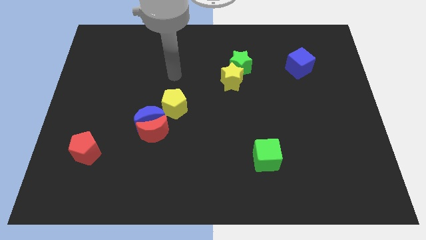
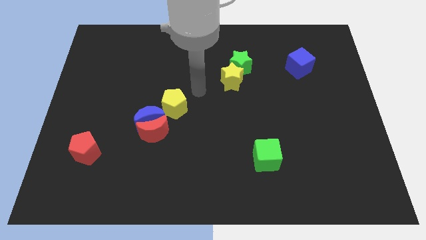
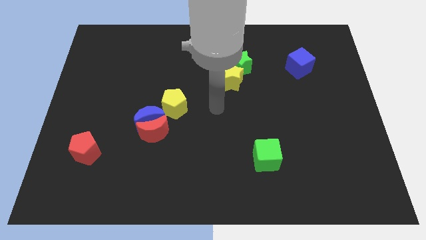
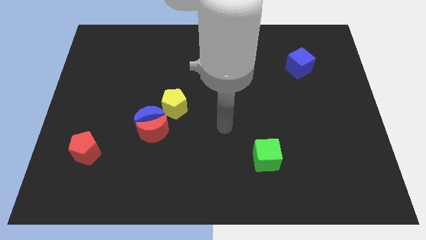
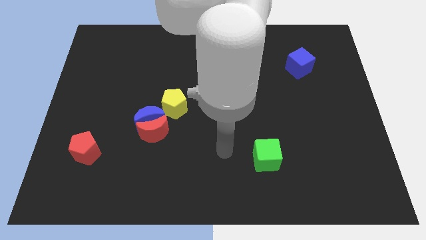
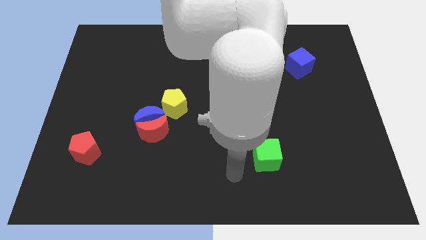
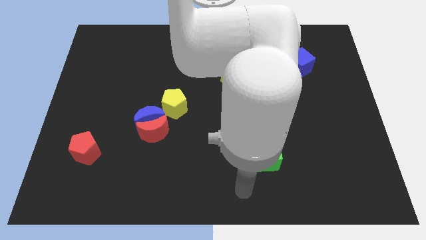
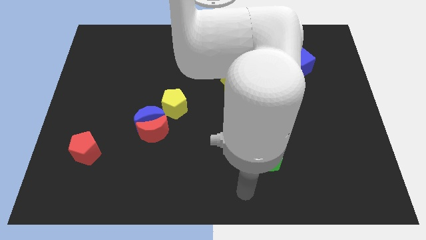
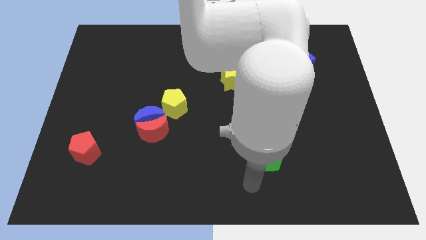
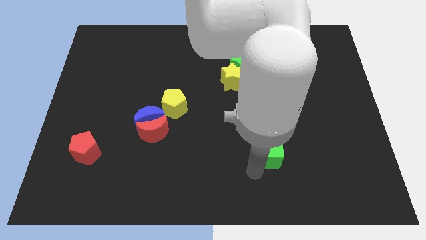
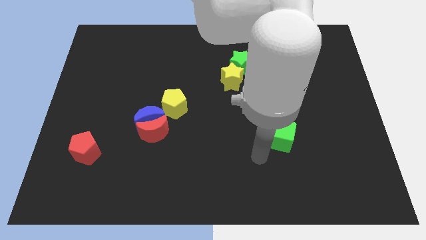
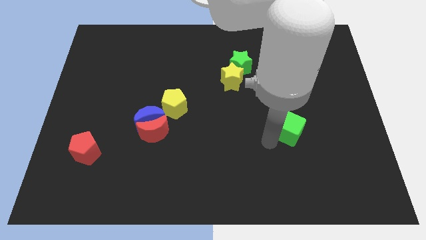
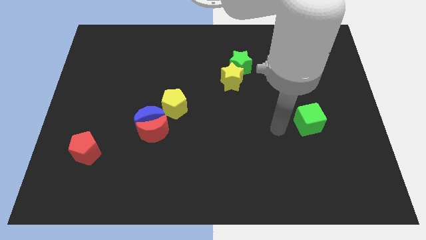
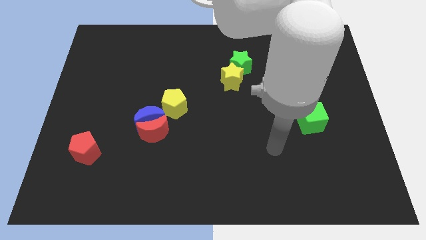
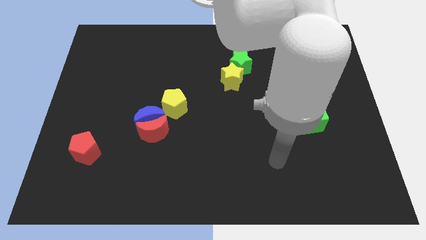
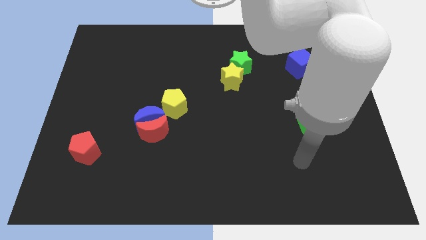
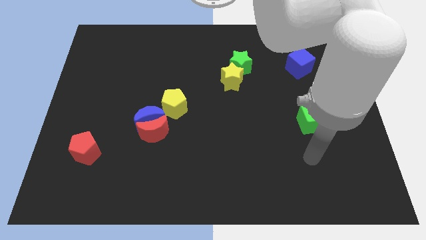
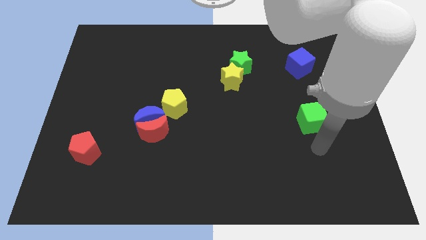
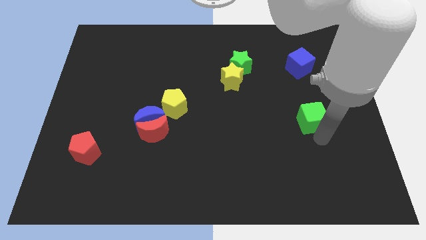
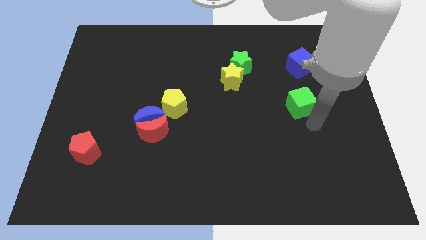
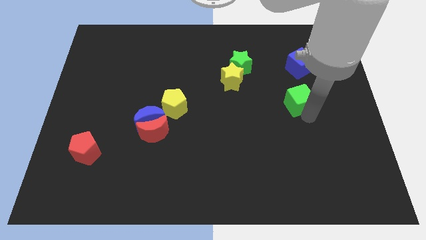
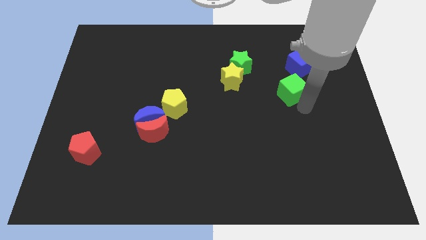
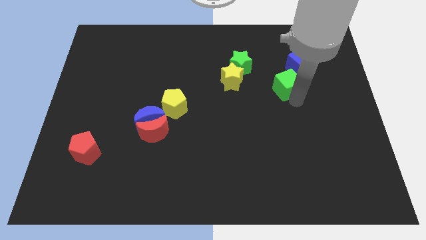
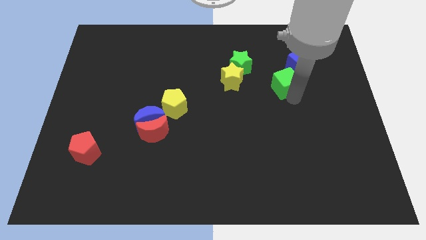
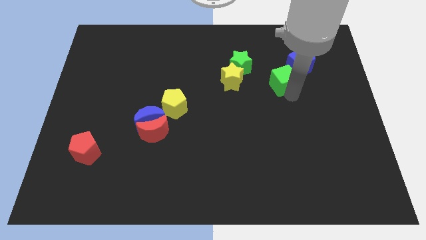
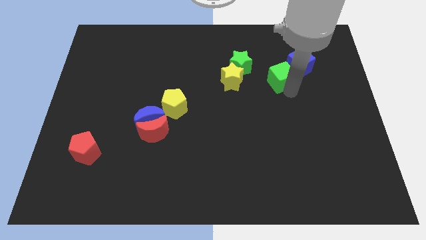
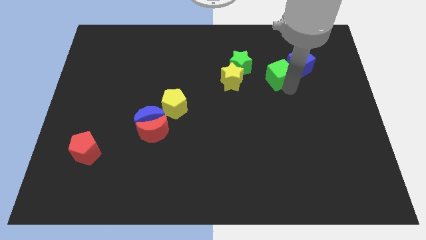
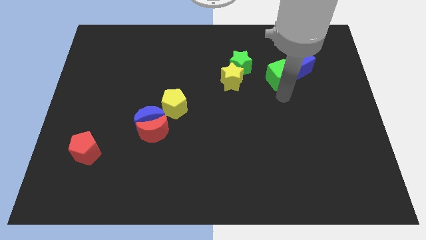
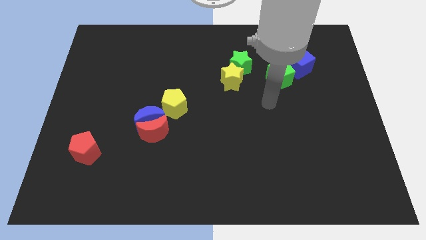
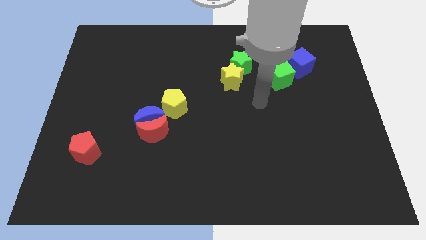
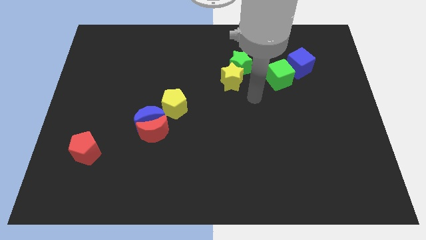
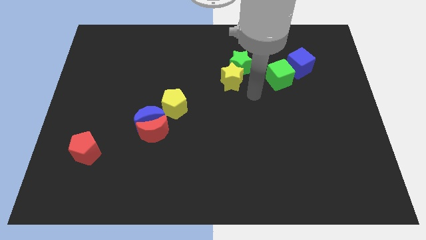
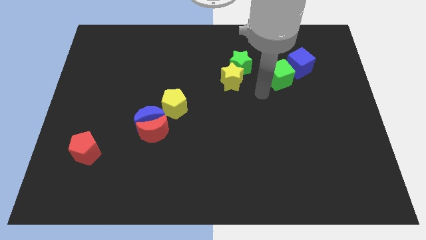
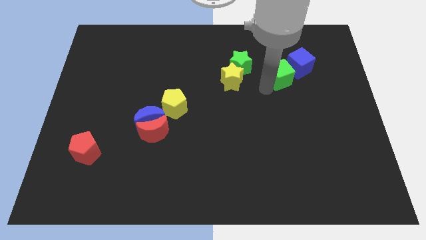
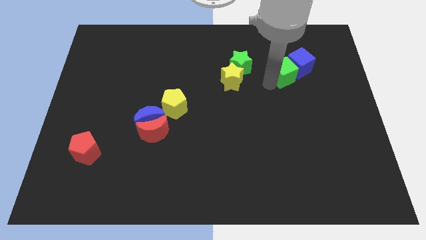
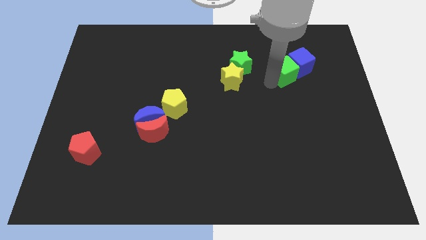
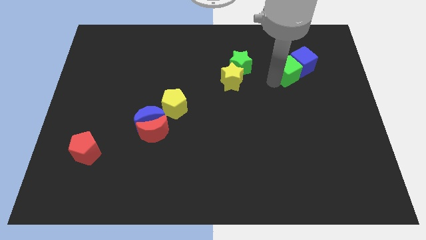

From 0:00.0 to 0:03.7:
push the green cube next to the blue cube

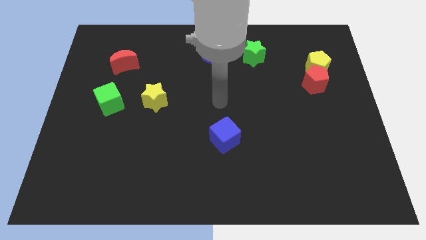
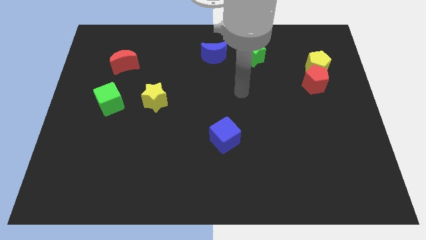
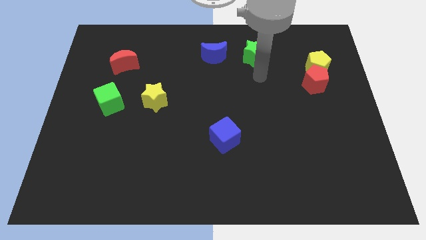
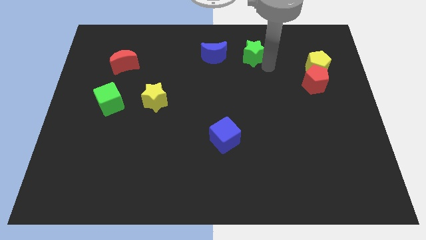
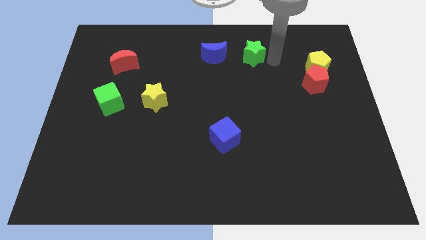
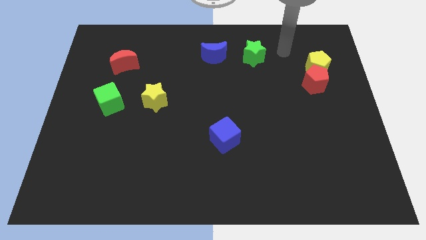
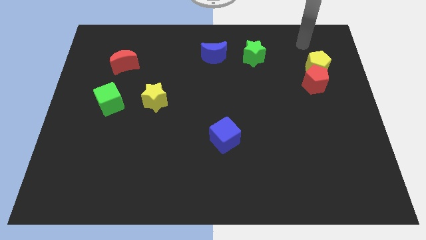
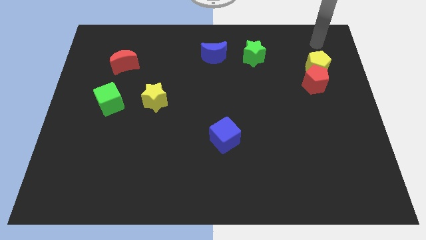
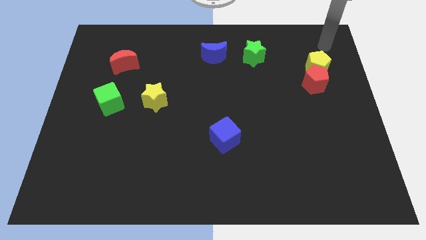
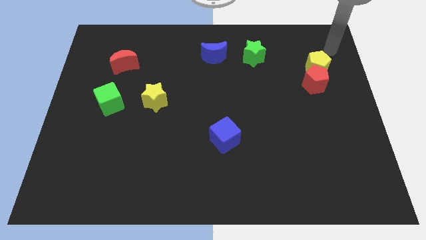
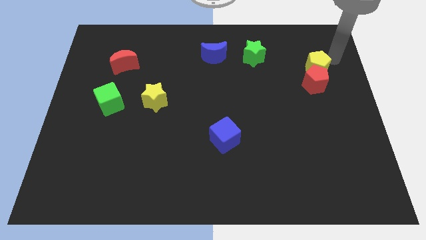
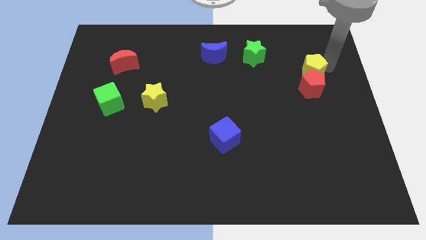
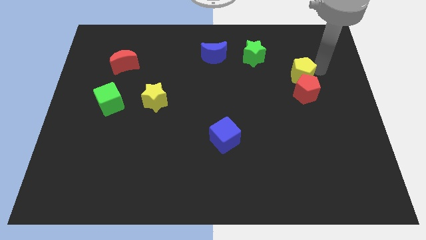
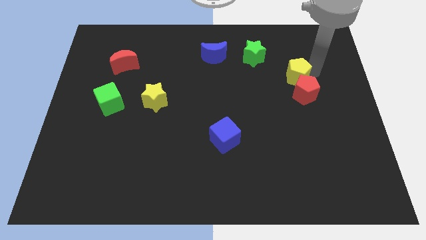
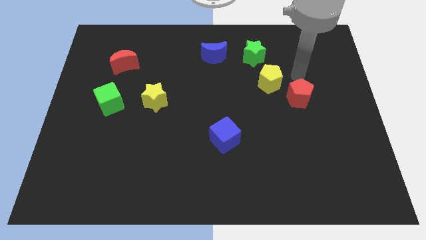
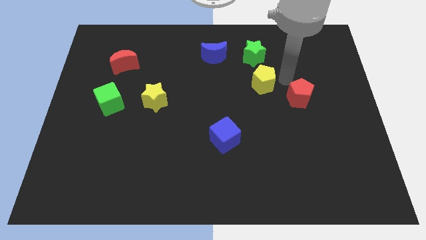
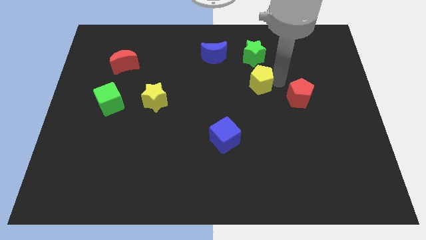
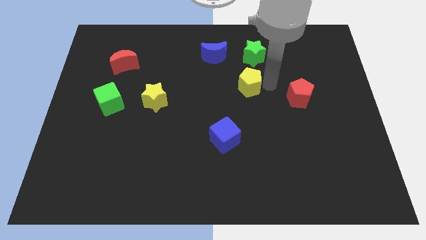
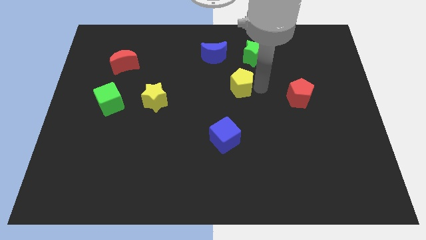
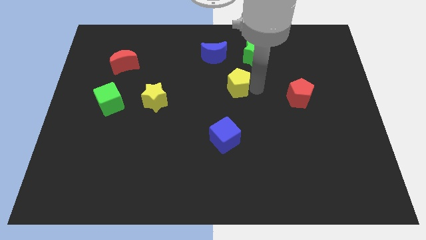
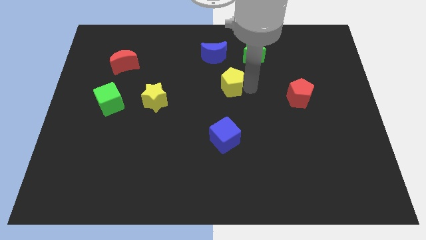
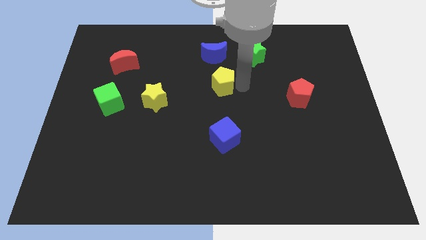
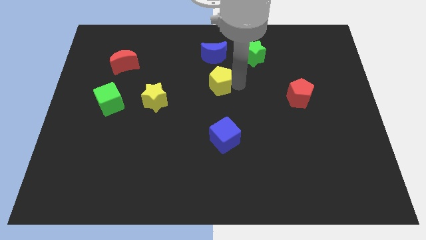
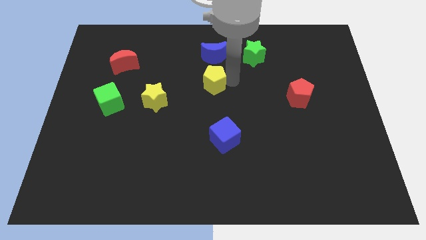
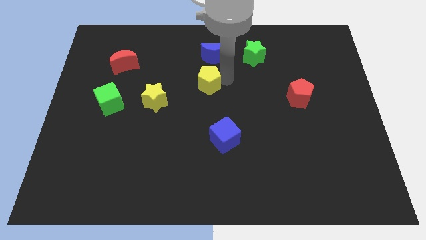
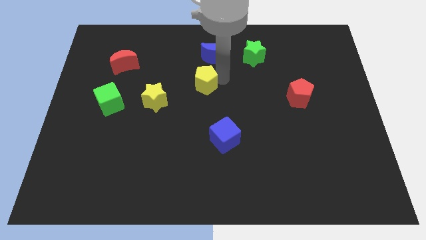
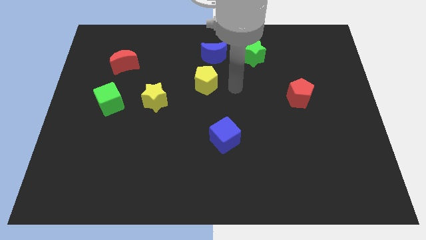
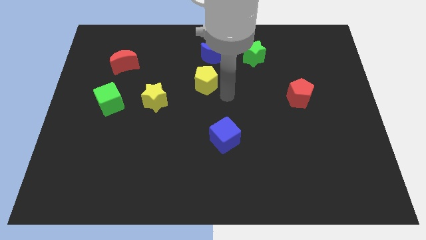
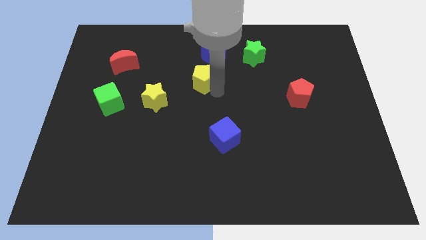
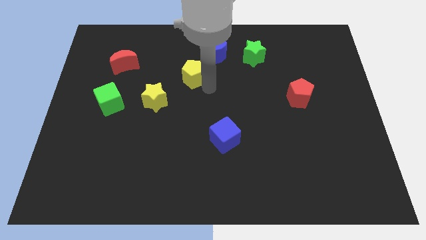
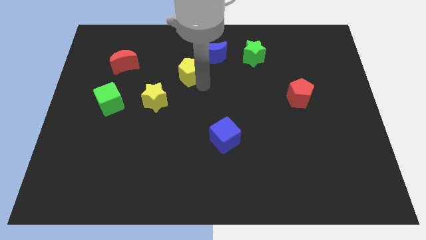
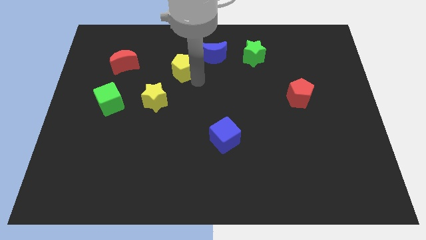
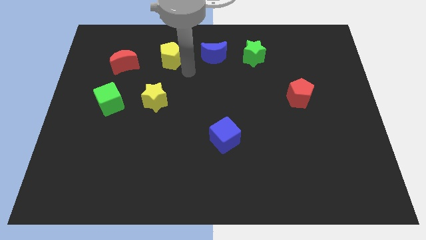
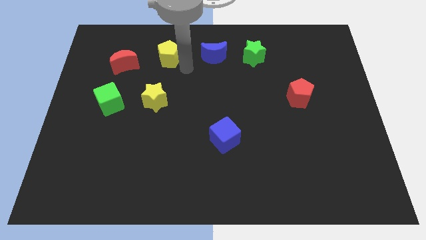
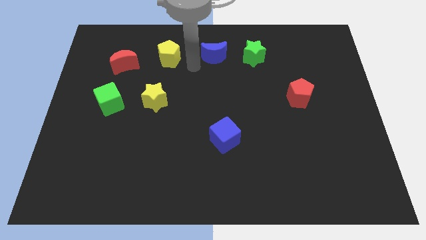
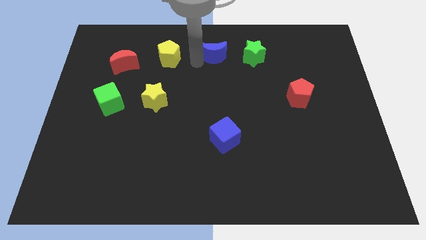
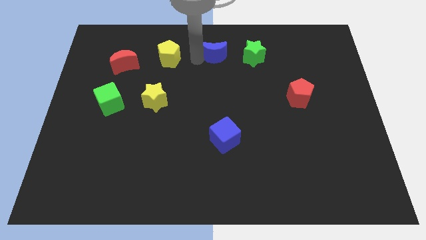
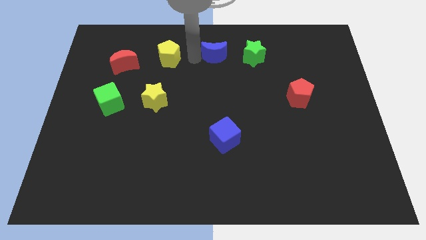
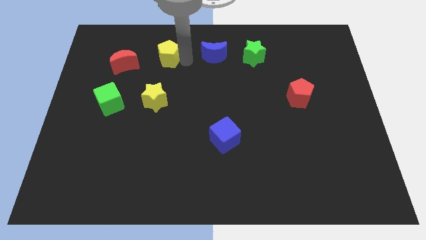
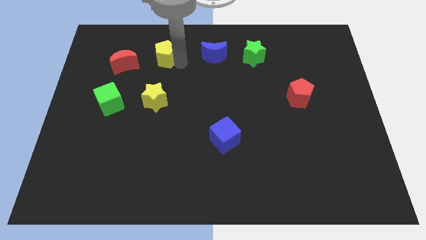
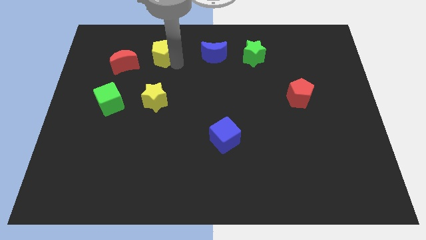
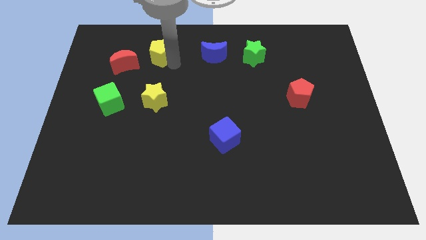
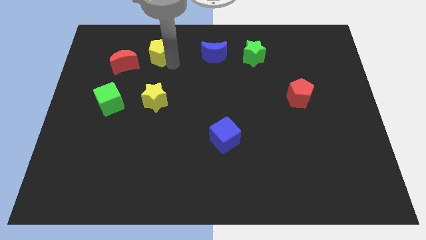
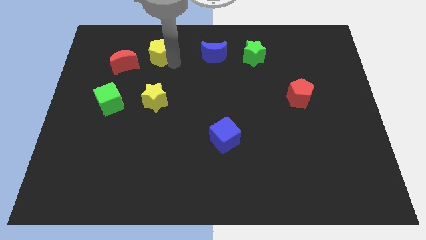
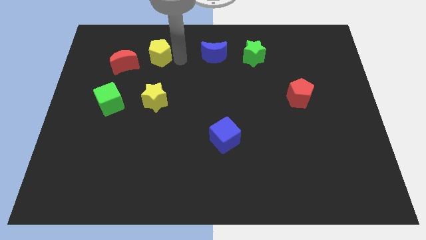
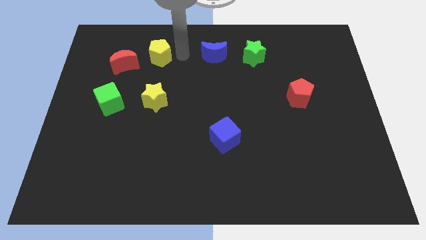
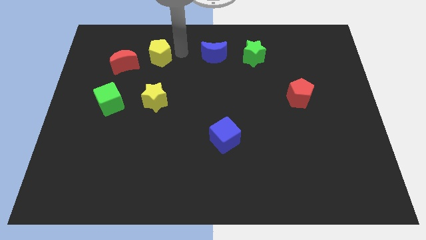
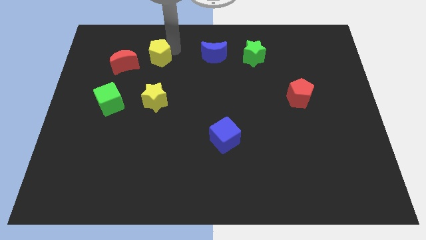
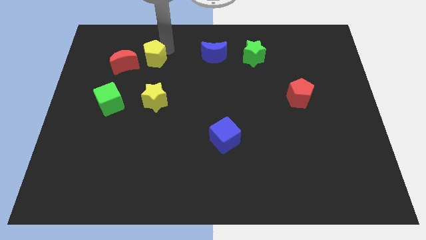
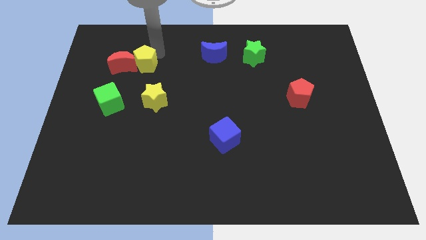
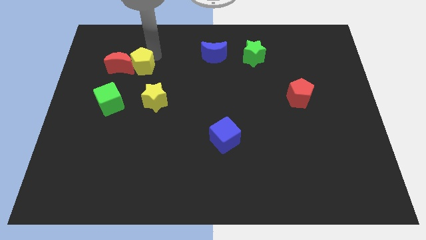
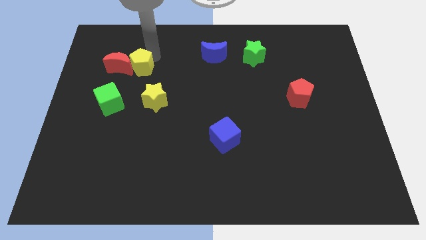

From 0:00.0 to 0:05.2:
slide the yellow pentagon to the red moon
